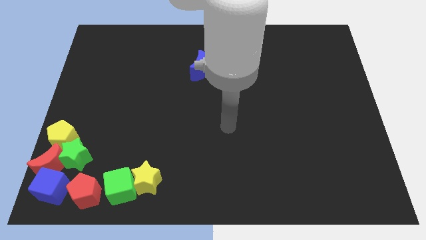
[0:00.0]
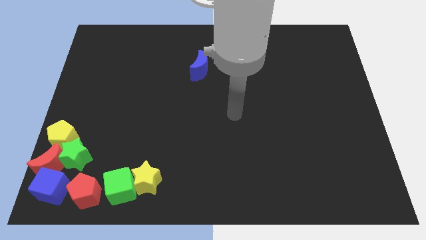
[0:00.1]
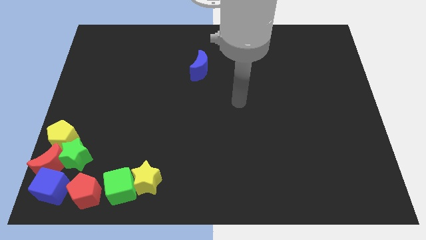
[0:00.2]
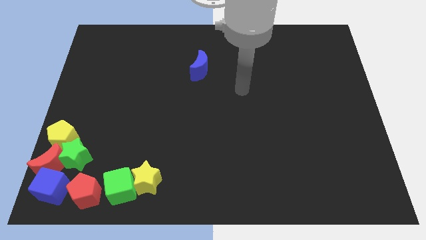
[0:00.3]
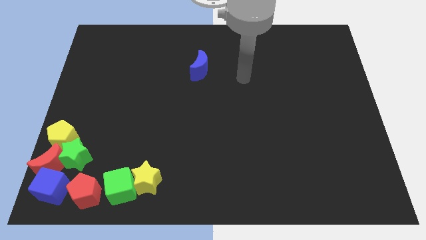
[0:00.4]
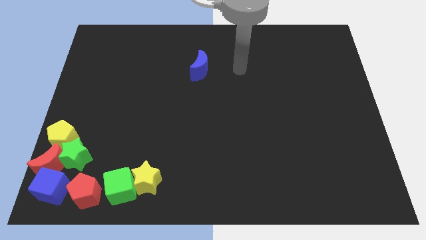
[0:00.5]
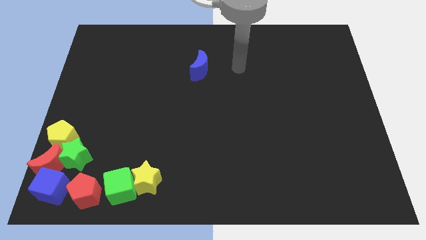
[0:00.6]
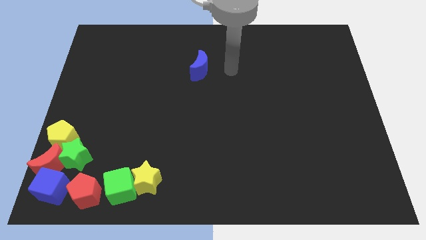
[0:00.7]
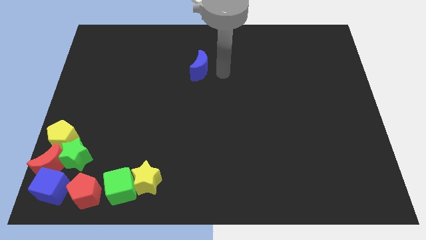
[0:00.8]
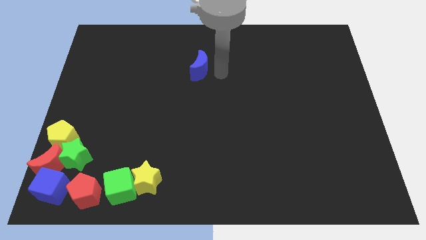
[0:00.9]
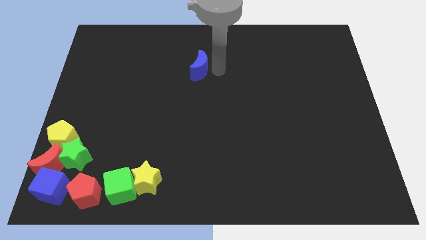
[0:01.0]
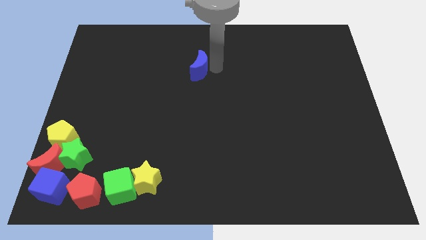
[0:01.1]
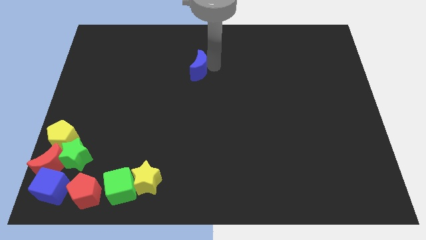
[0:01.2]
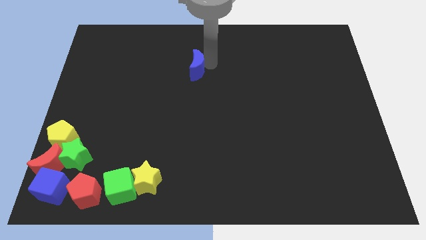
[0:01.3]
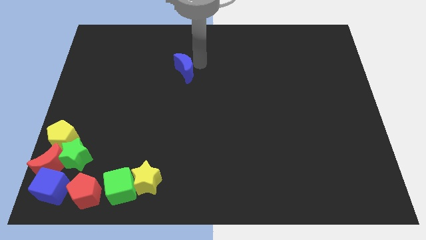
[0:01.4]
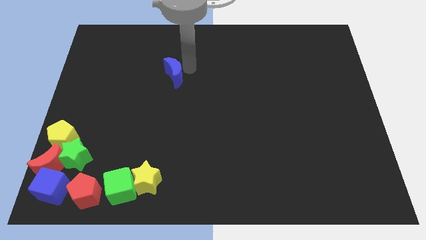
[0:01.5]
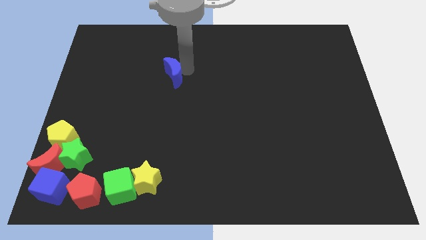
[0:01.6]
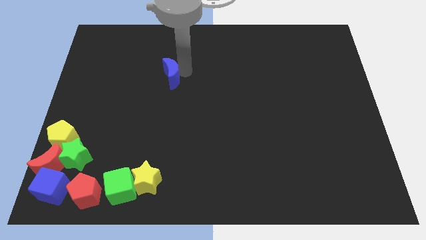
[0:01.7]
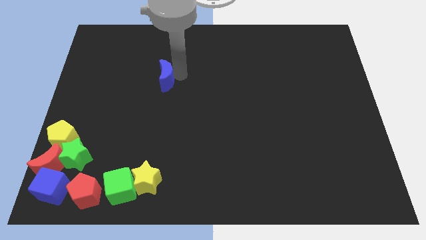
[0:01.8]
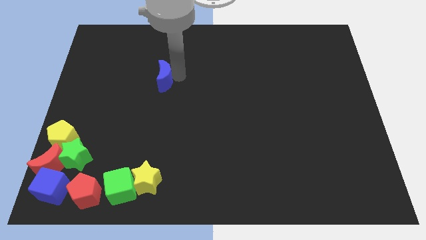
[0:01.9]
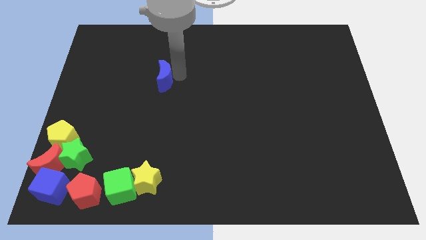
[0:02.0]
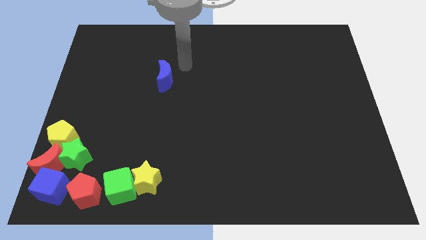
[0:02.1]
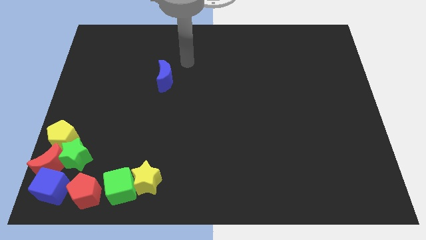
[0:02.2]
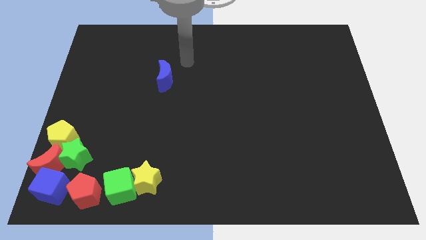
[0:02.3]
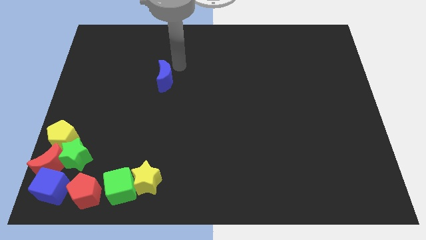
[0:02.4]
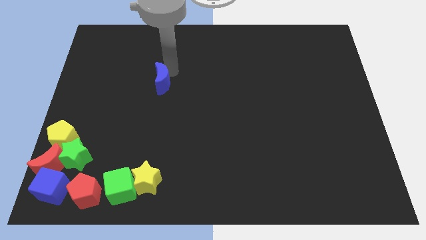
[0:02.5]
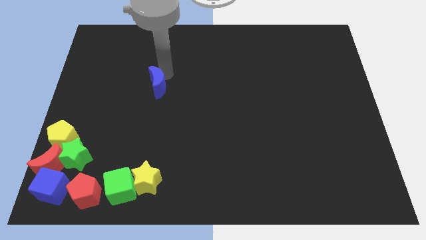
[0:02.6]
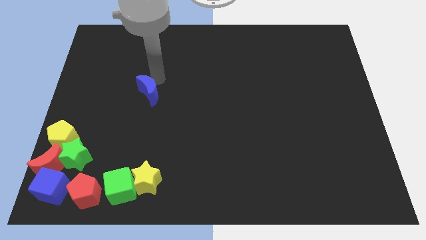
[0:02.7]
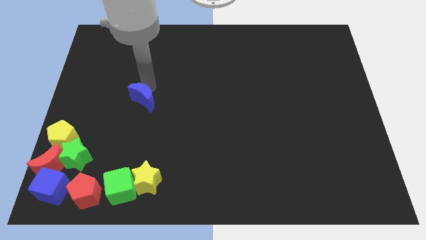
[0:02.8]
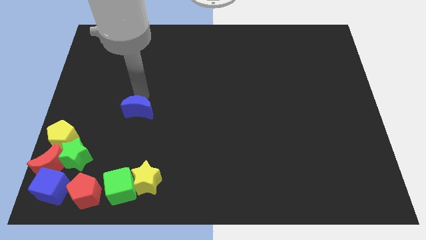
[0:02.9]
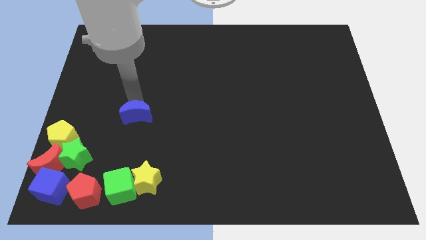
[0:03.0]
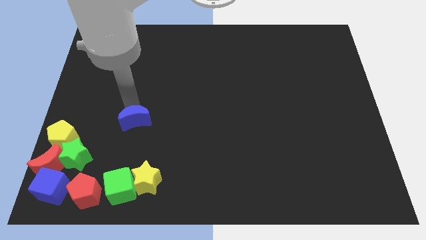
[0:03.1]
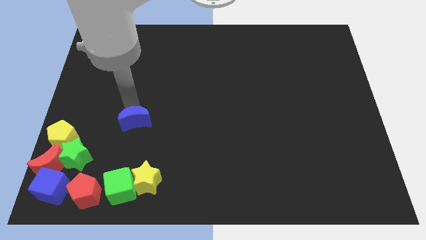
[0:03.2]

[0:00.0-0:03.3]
place blue crescent diagonal to the green star

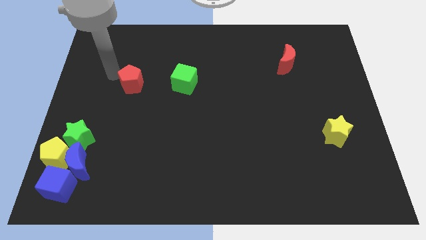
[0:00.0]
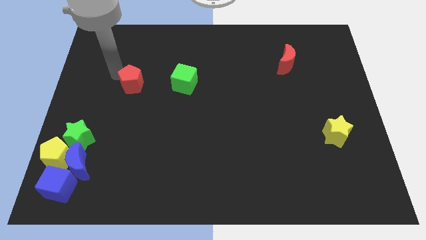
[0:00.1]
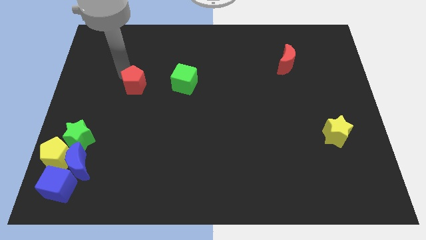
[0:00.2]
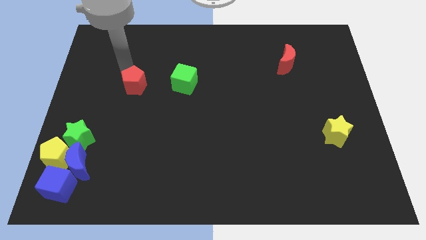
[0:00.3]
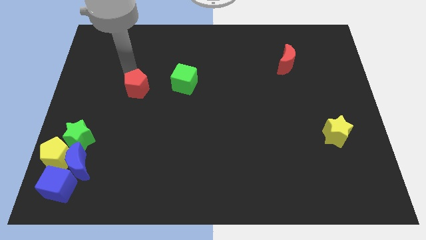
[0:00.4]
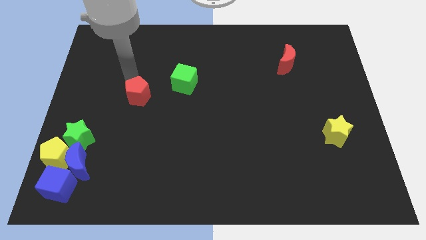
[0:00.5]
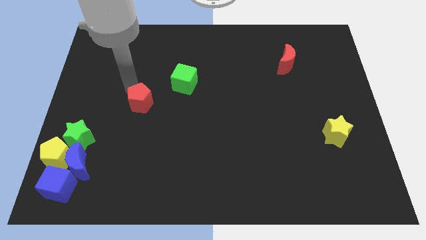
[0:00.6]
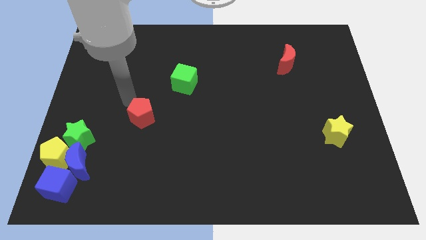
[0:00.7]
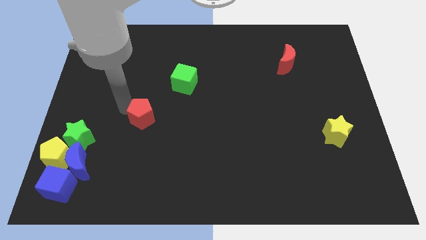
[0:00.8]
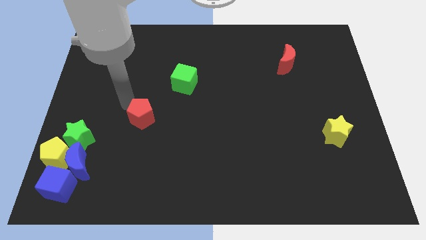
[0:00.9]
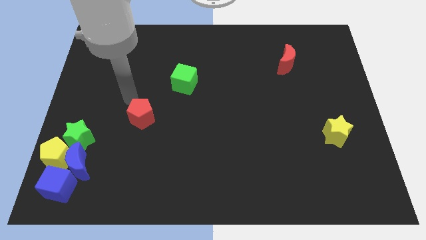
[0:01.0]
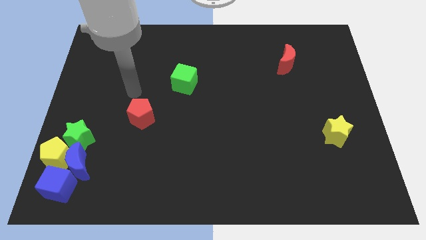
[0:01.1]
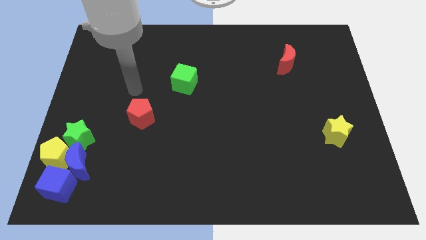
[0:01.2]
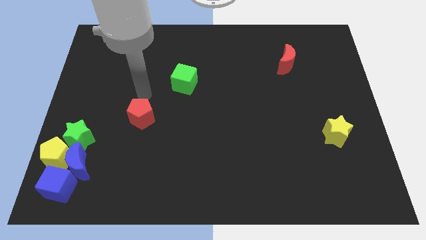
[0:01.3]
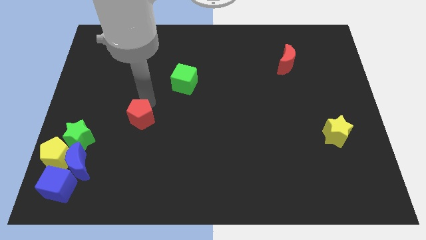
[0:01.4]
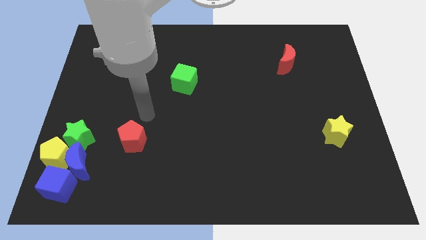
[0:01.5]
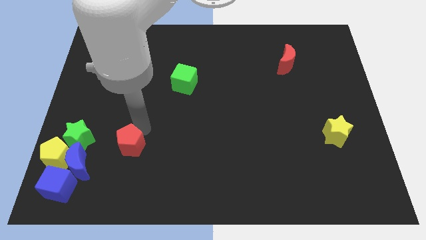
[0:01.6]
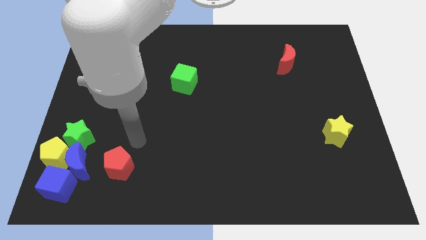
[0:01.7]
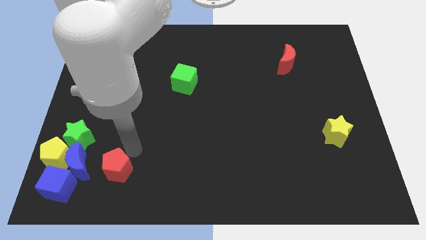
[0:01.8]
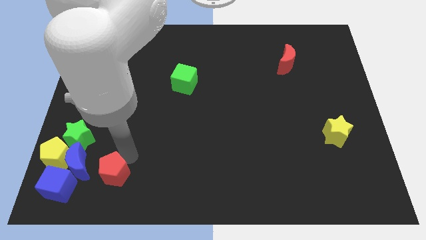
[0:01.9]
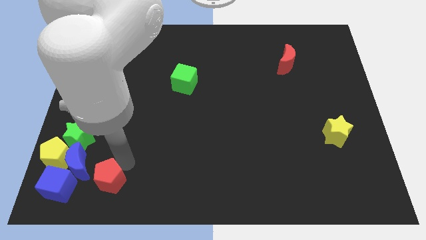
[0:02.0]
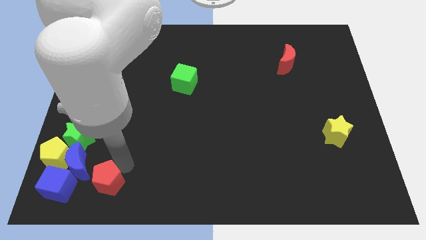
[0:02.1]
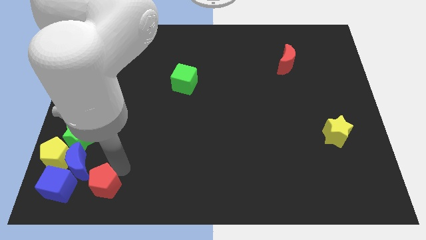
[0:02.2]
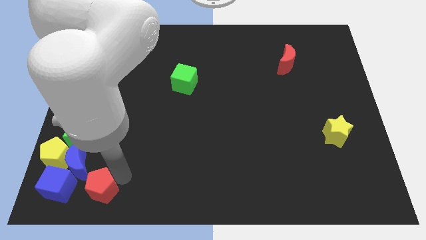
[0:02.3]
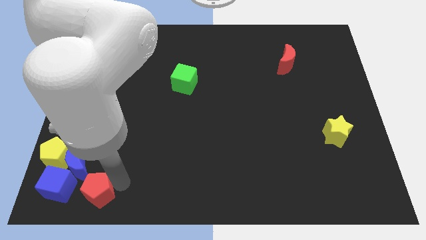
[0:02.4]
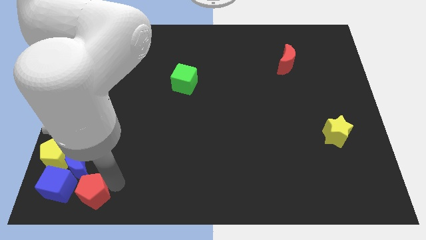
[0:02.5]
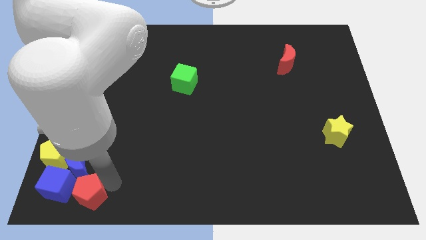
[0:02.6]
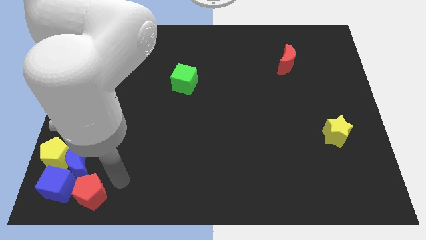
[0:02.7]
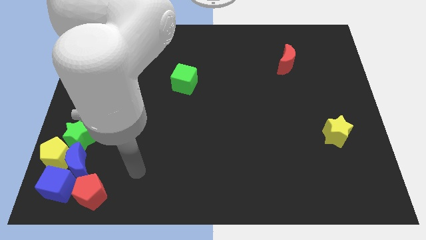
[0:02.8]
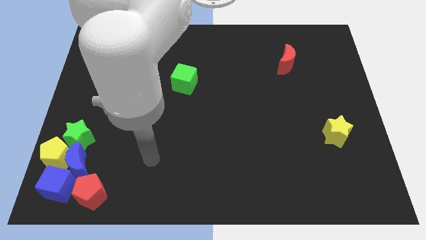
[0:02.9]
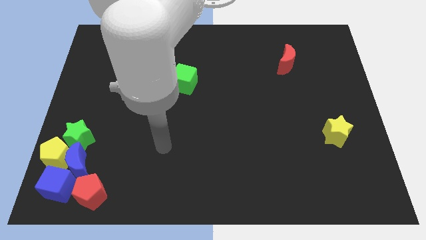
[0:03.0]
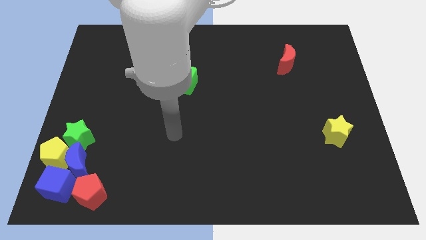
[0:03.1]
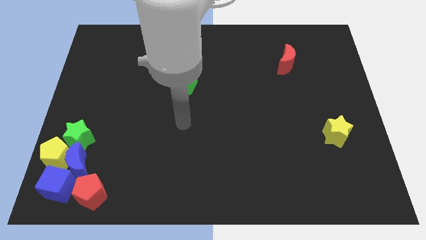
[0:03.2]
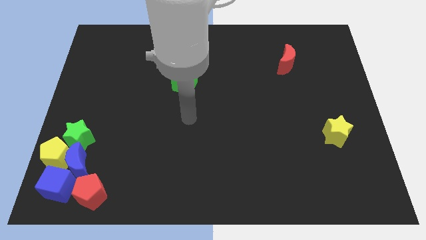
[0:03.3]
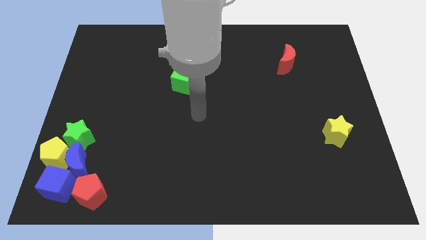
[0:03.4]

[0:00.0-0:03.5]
push the red pentagon to the right side of the blue cube

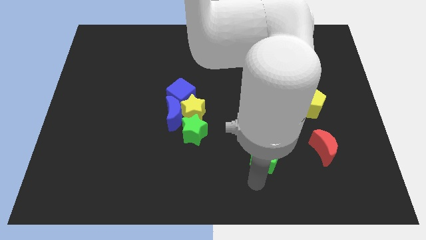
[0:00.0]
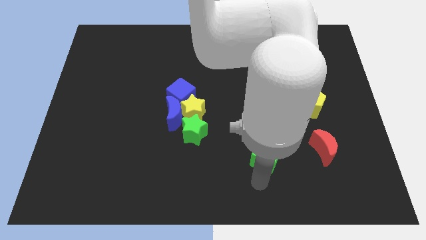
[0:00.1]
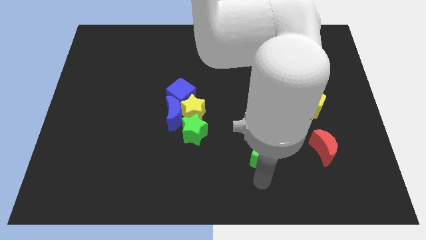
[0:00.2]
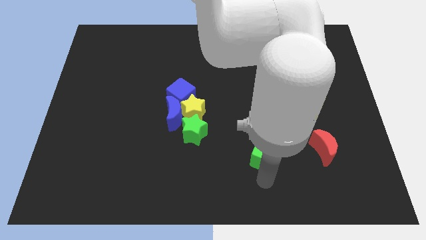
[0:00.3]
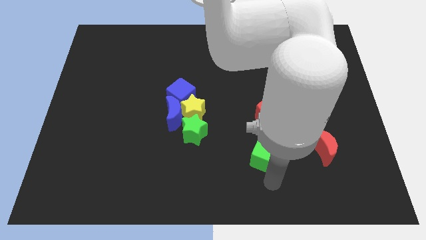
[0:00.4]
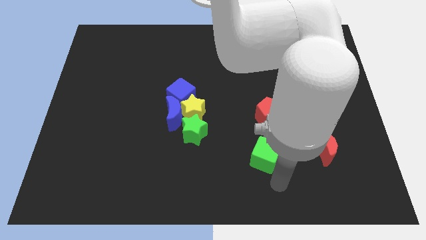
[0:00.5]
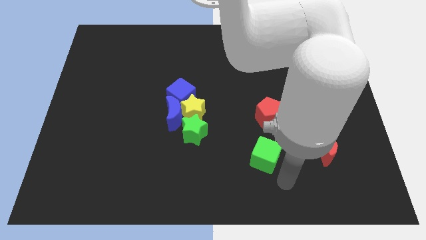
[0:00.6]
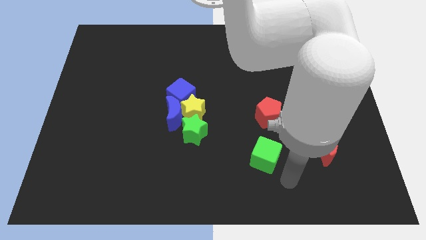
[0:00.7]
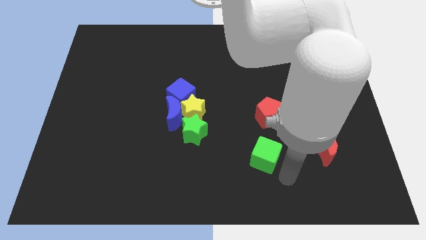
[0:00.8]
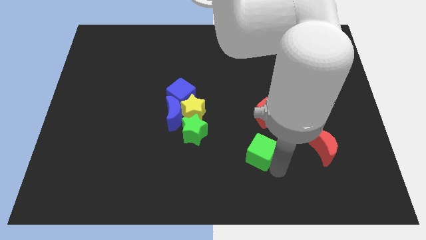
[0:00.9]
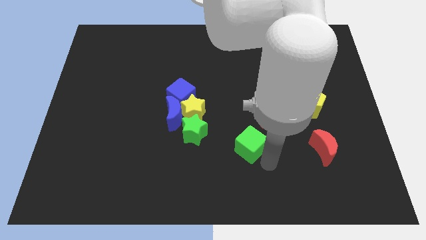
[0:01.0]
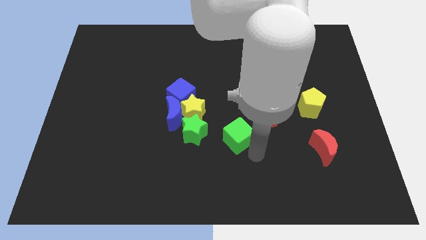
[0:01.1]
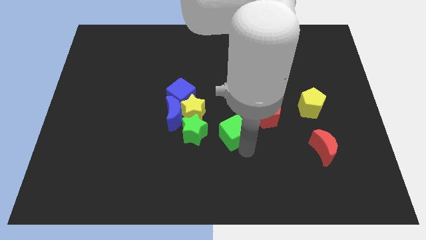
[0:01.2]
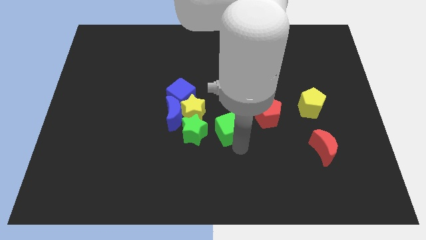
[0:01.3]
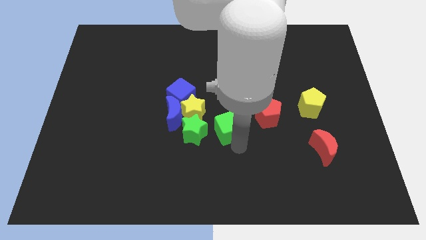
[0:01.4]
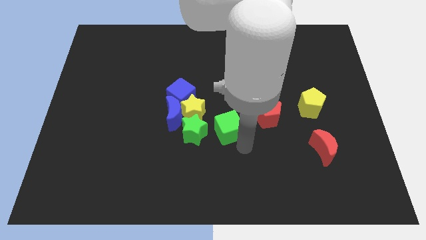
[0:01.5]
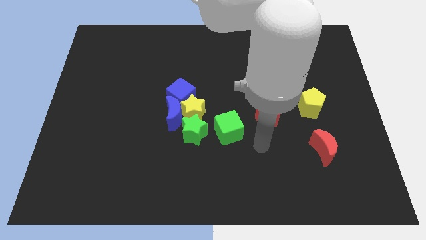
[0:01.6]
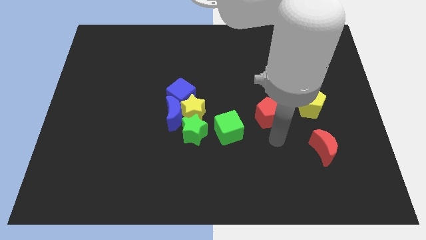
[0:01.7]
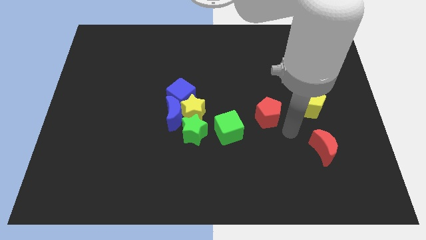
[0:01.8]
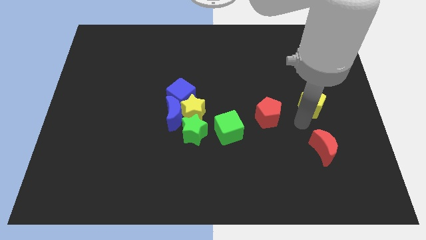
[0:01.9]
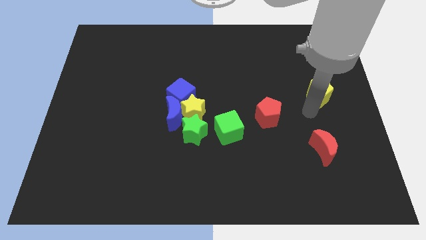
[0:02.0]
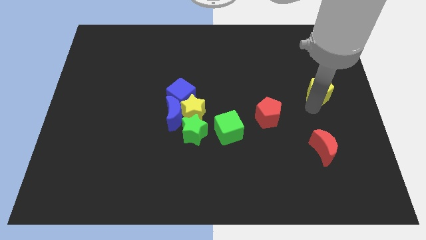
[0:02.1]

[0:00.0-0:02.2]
push yellow pentagon slightly towards the top right

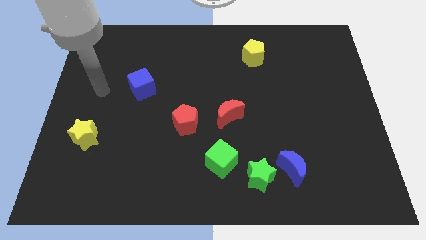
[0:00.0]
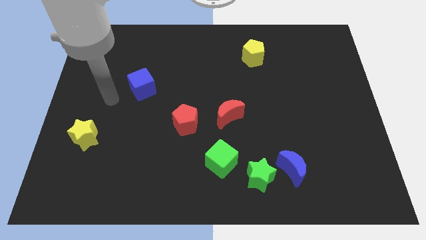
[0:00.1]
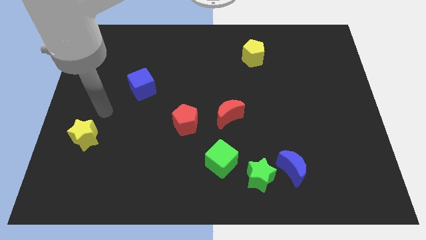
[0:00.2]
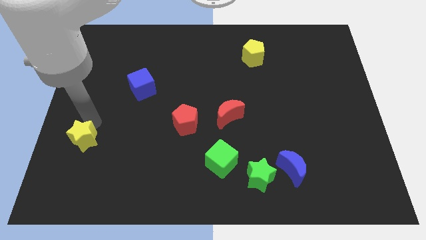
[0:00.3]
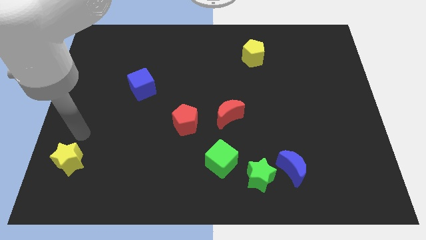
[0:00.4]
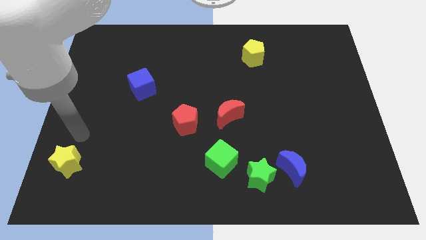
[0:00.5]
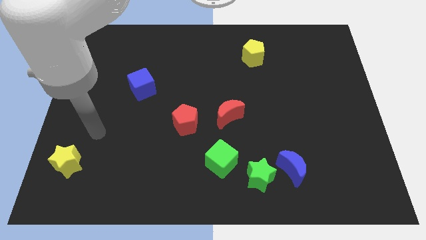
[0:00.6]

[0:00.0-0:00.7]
place the yellow star slightly towards the downwards
